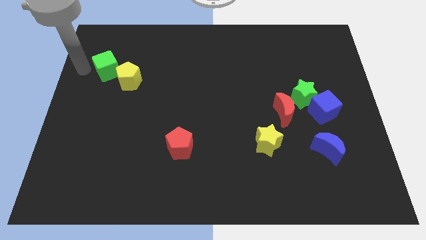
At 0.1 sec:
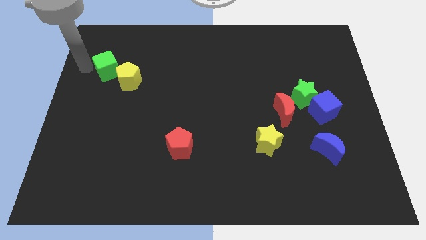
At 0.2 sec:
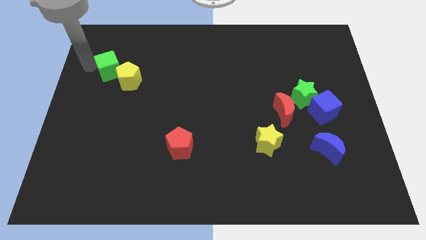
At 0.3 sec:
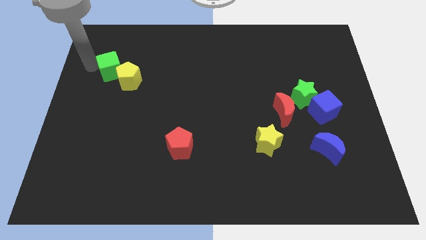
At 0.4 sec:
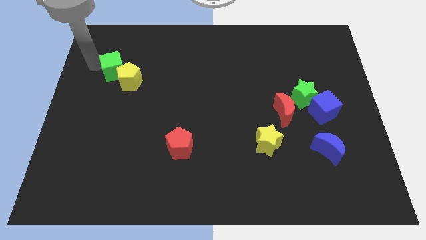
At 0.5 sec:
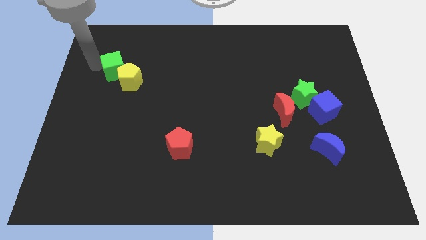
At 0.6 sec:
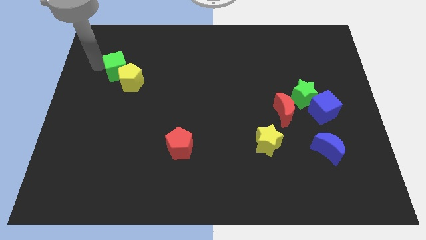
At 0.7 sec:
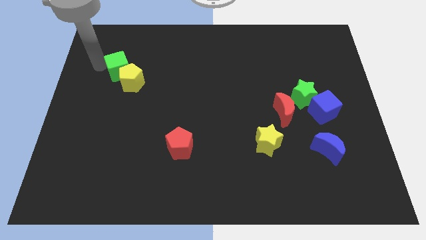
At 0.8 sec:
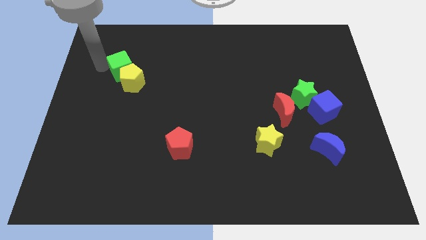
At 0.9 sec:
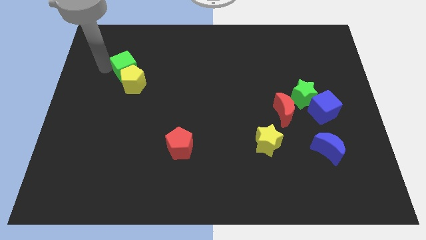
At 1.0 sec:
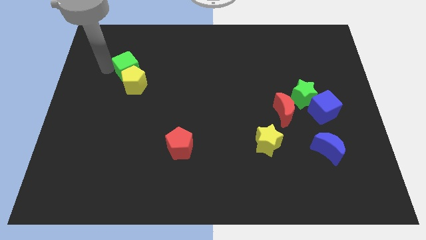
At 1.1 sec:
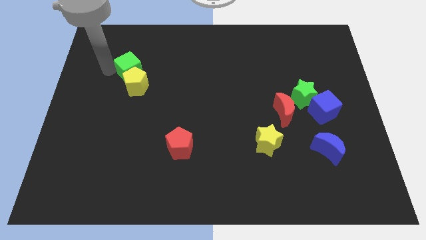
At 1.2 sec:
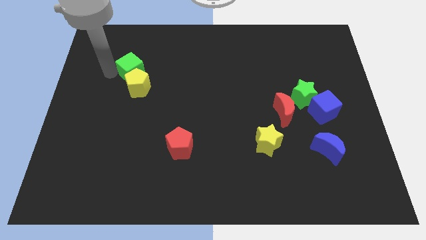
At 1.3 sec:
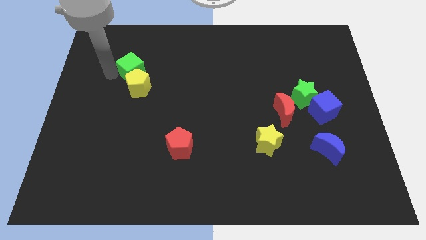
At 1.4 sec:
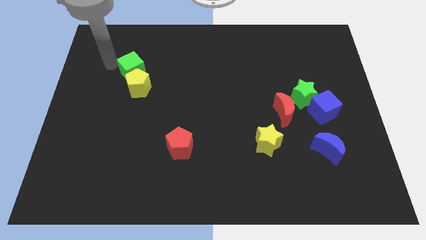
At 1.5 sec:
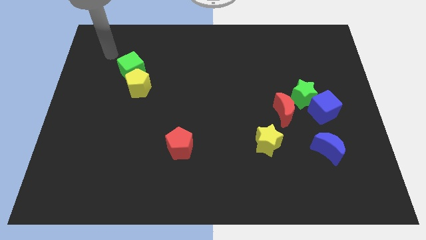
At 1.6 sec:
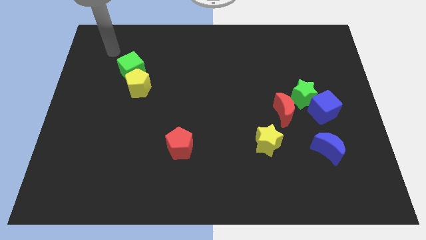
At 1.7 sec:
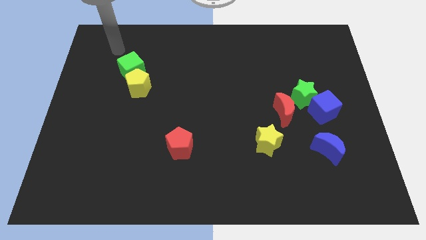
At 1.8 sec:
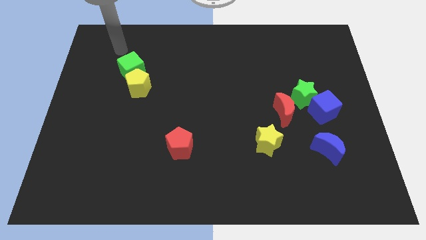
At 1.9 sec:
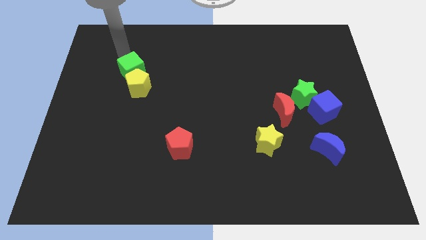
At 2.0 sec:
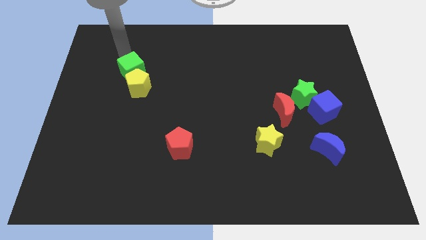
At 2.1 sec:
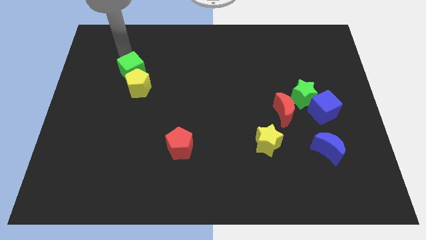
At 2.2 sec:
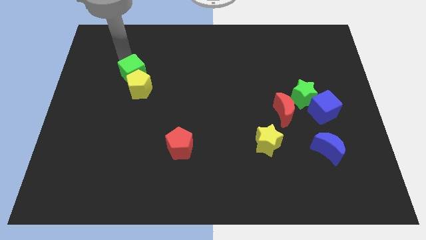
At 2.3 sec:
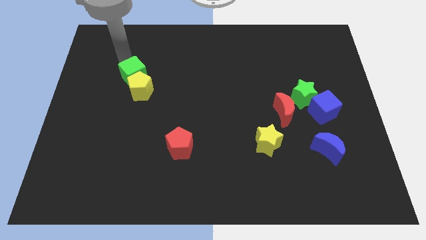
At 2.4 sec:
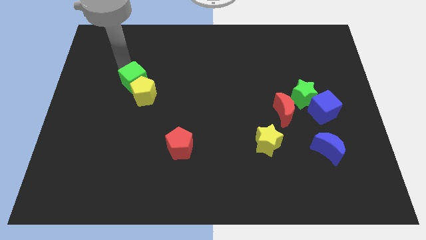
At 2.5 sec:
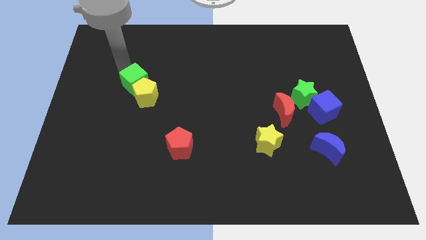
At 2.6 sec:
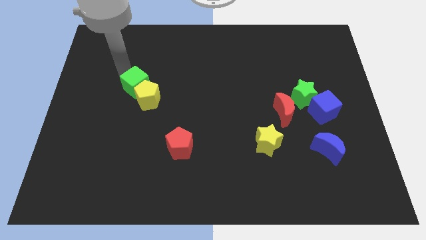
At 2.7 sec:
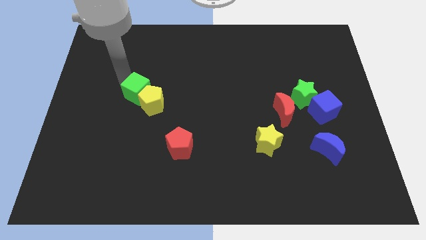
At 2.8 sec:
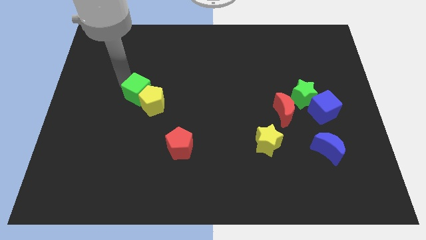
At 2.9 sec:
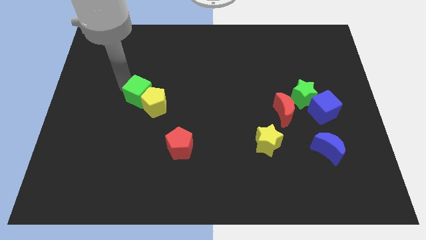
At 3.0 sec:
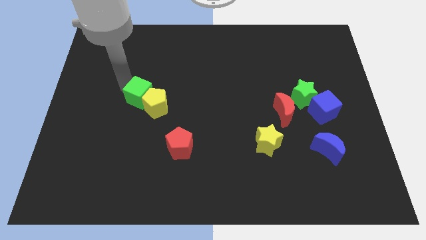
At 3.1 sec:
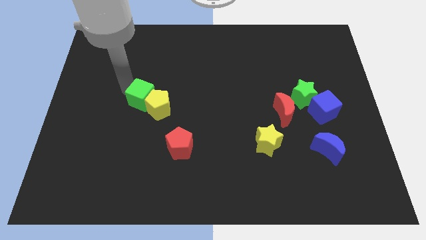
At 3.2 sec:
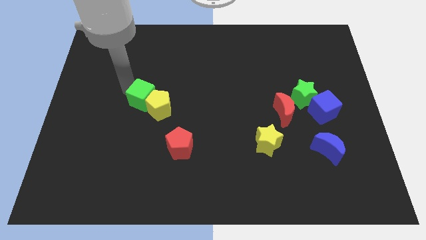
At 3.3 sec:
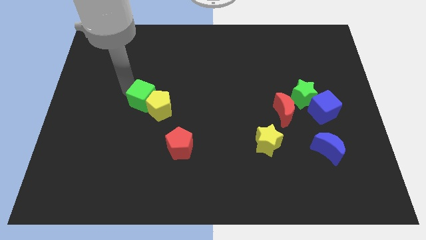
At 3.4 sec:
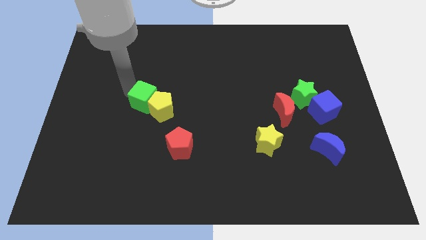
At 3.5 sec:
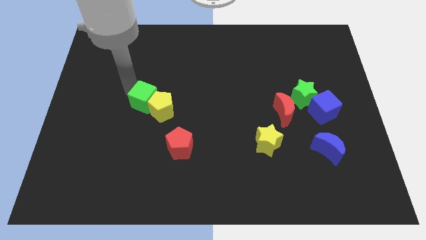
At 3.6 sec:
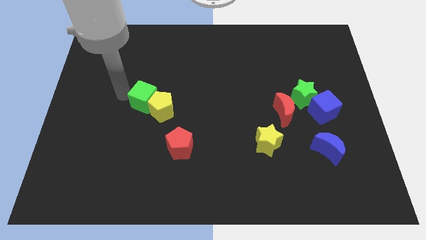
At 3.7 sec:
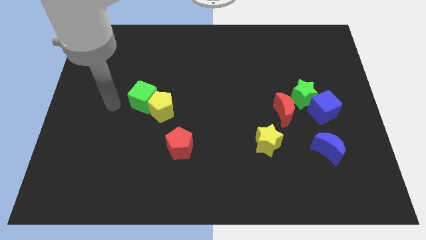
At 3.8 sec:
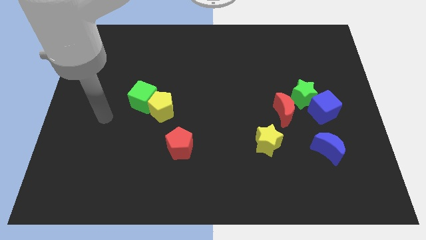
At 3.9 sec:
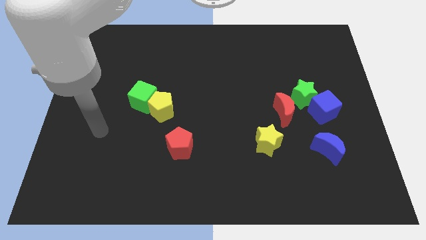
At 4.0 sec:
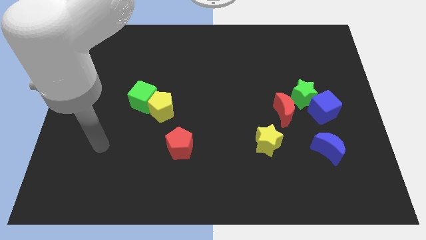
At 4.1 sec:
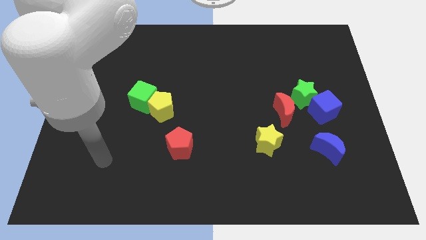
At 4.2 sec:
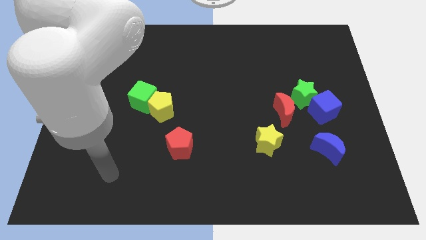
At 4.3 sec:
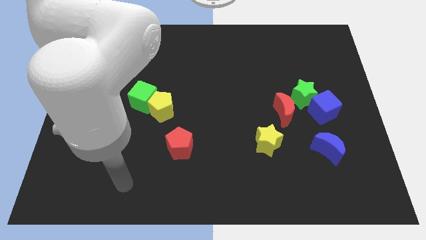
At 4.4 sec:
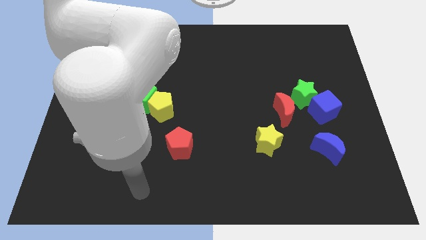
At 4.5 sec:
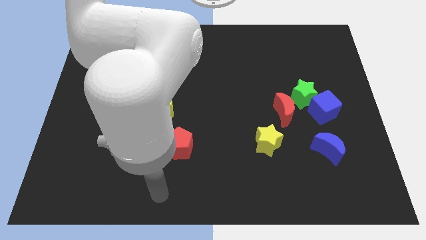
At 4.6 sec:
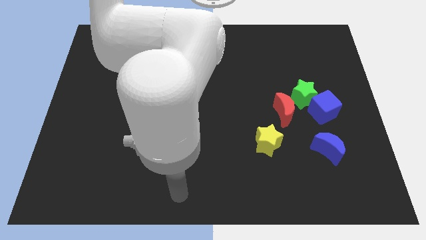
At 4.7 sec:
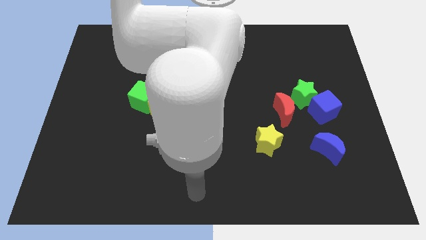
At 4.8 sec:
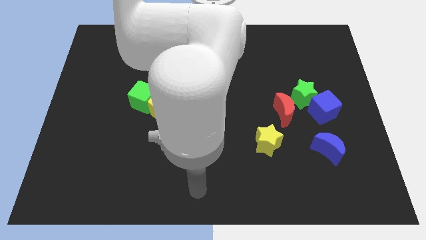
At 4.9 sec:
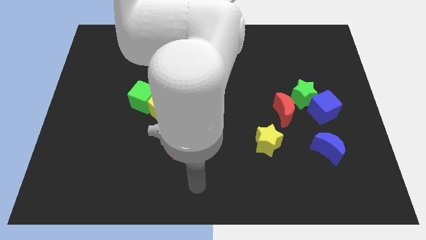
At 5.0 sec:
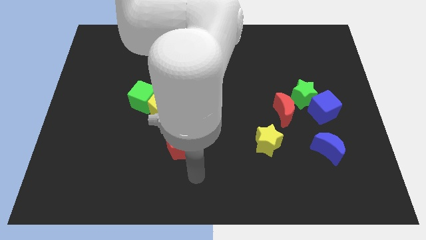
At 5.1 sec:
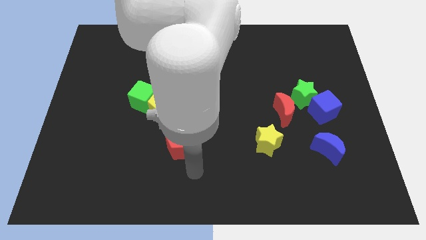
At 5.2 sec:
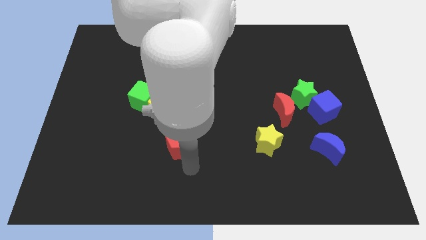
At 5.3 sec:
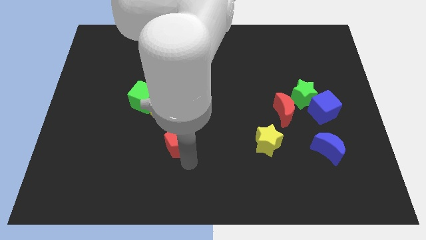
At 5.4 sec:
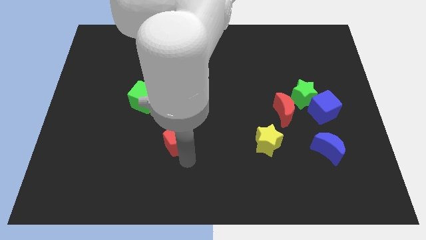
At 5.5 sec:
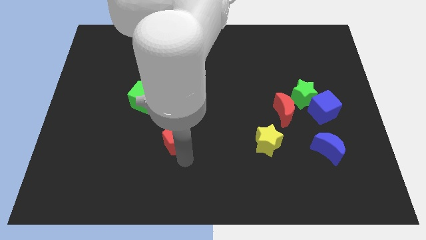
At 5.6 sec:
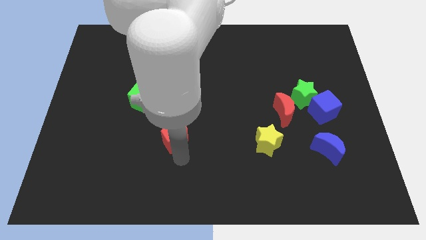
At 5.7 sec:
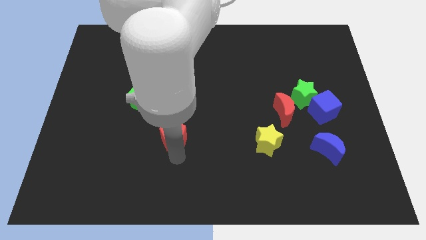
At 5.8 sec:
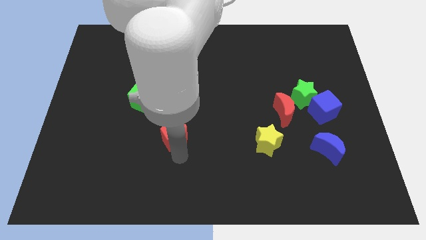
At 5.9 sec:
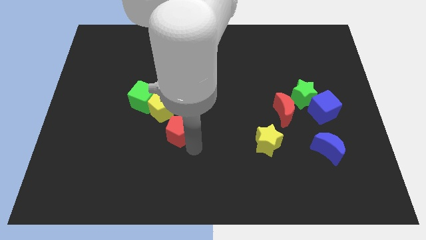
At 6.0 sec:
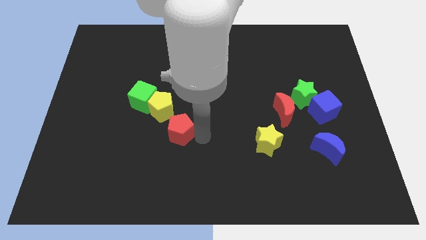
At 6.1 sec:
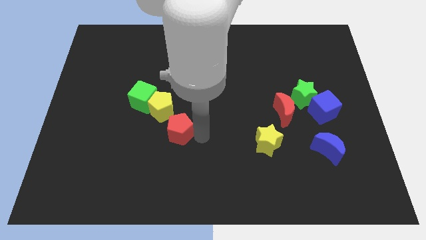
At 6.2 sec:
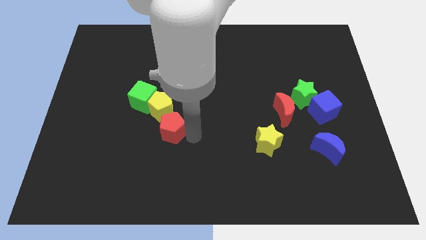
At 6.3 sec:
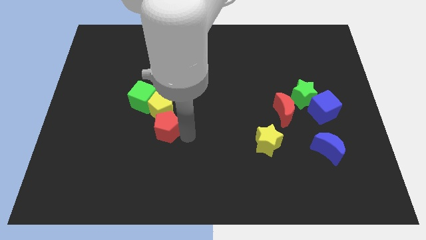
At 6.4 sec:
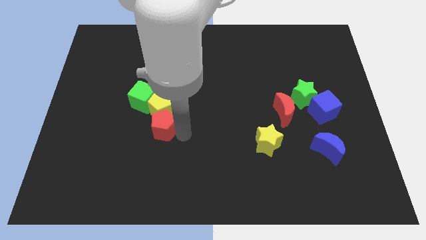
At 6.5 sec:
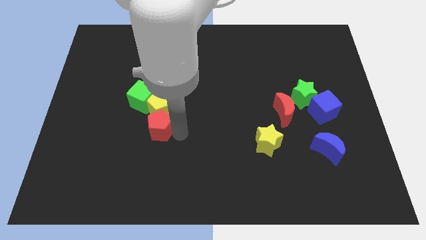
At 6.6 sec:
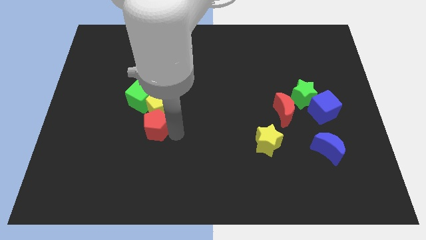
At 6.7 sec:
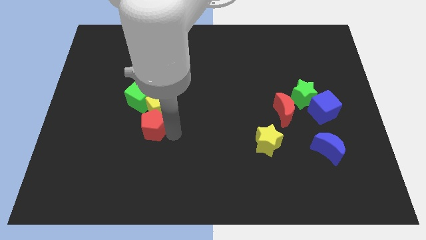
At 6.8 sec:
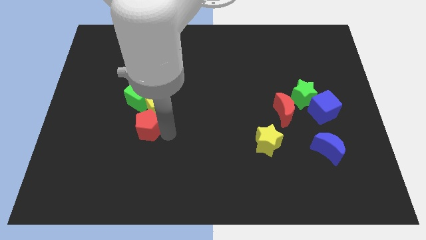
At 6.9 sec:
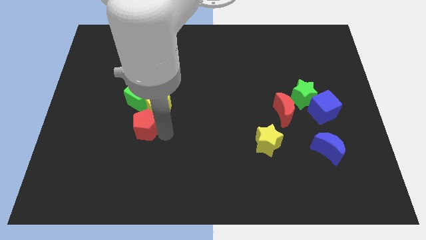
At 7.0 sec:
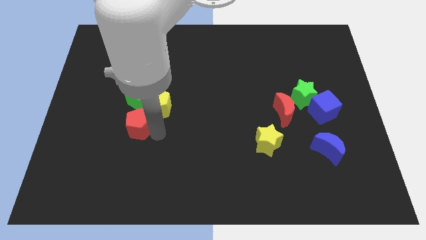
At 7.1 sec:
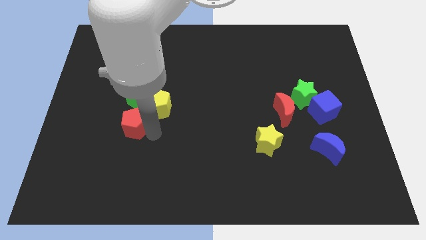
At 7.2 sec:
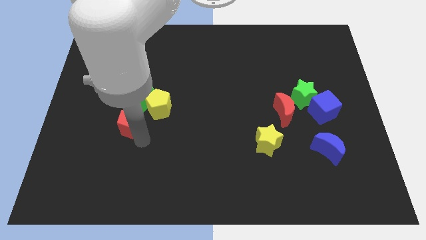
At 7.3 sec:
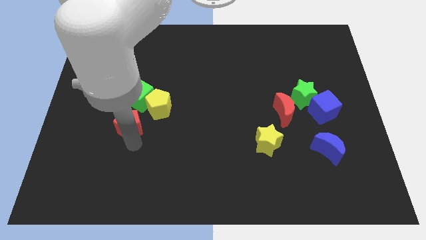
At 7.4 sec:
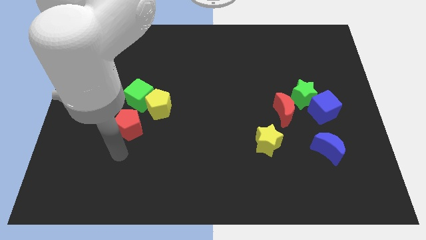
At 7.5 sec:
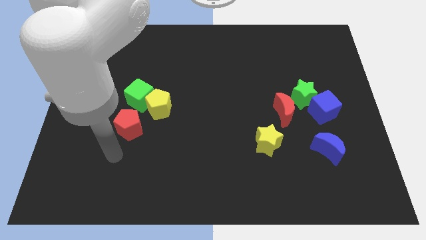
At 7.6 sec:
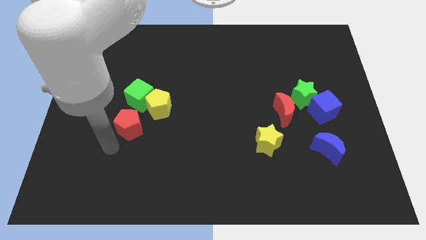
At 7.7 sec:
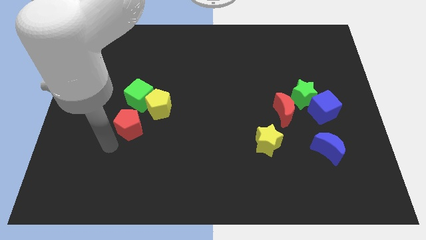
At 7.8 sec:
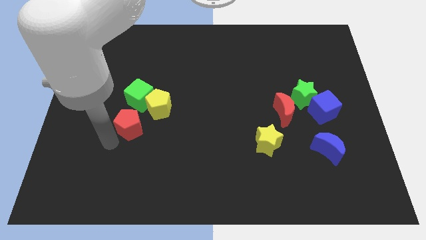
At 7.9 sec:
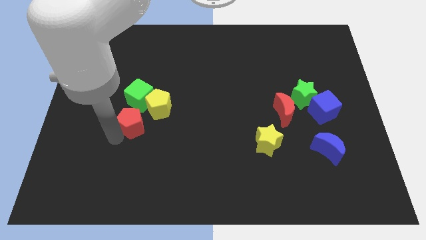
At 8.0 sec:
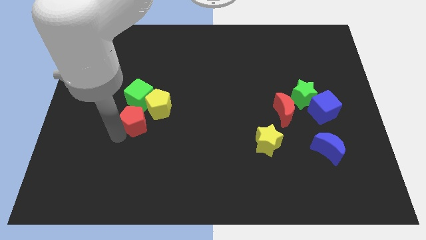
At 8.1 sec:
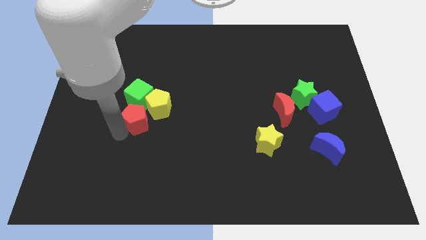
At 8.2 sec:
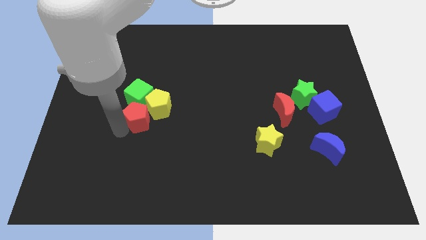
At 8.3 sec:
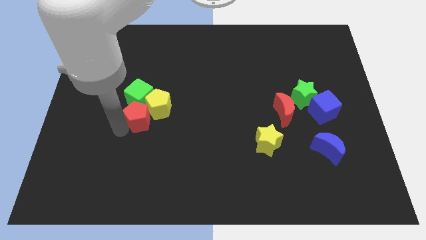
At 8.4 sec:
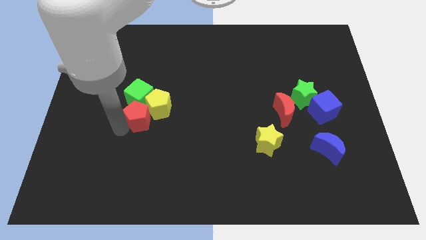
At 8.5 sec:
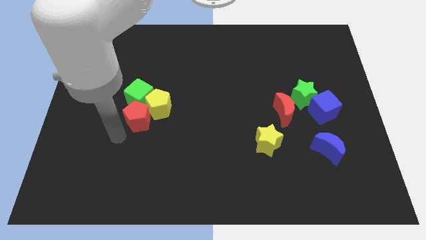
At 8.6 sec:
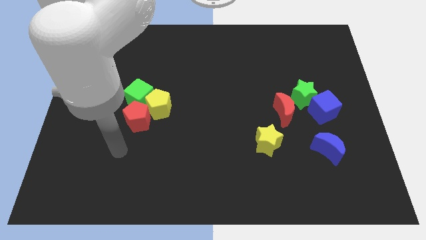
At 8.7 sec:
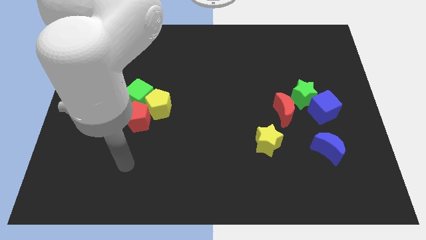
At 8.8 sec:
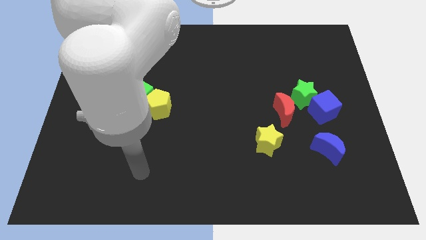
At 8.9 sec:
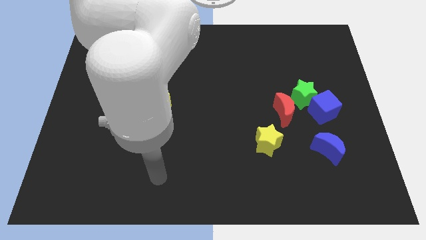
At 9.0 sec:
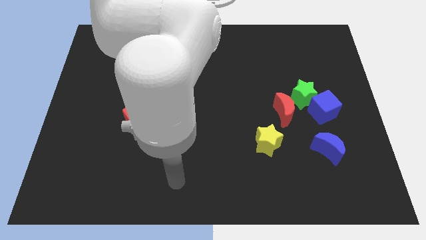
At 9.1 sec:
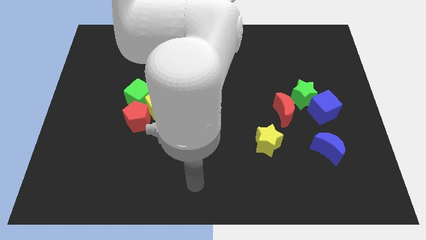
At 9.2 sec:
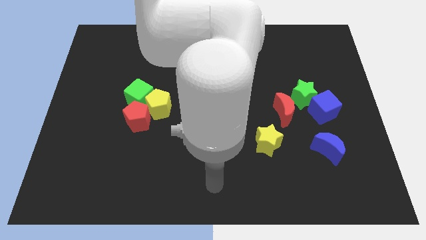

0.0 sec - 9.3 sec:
make a group of blocks with green cubeyellow pentagon and red pentagon
